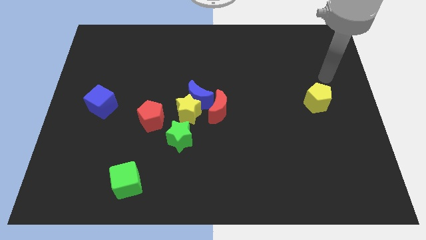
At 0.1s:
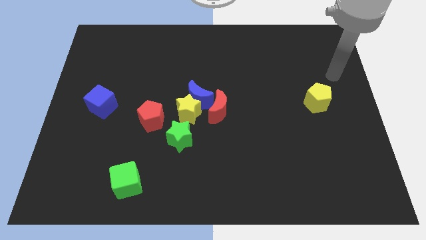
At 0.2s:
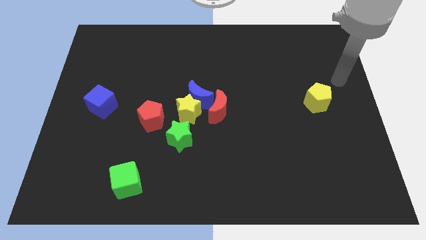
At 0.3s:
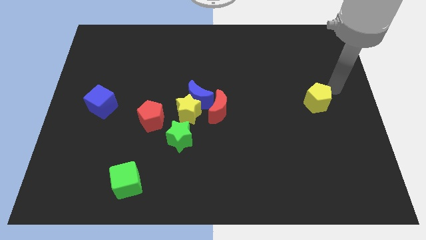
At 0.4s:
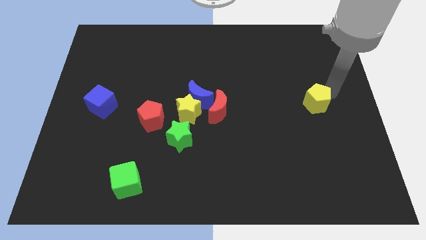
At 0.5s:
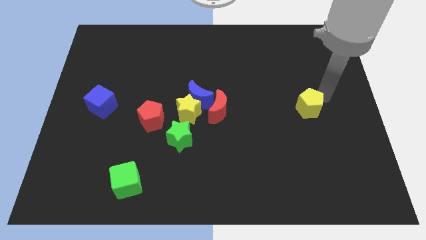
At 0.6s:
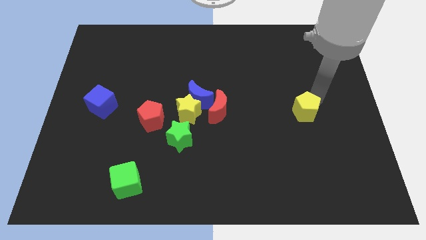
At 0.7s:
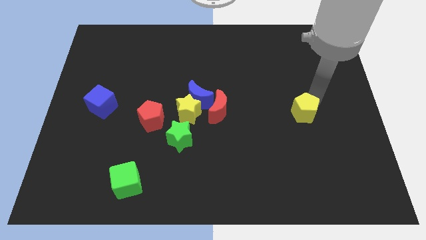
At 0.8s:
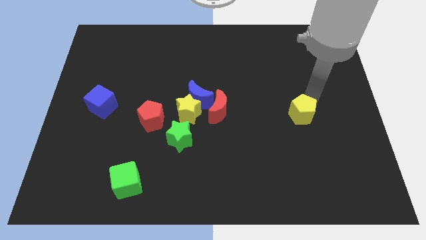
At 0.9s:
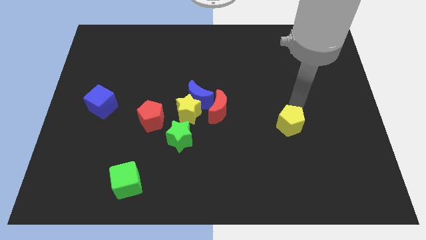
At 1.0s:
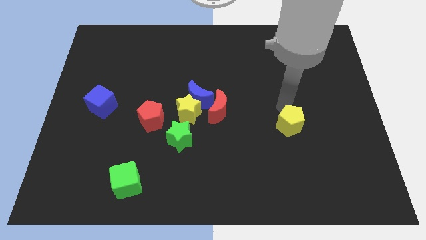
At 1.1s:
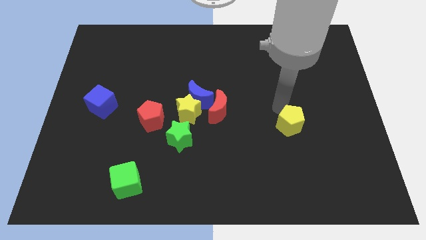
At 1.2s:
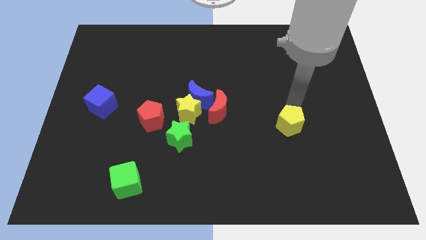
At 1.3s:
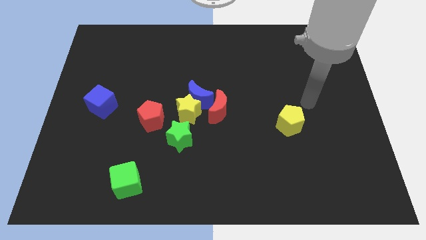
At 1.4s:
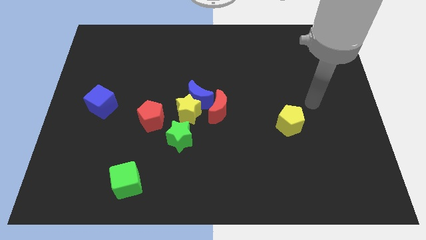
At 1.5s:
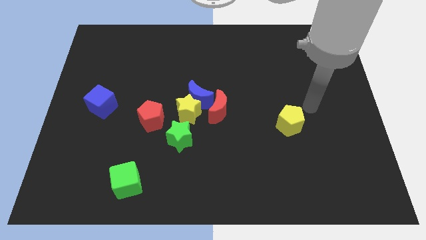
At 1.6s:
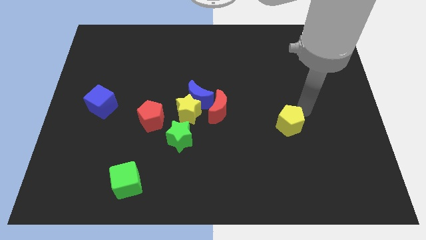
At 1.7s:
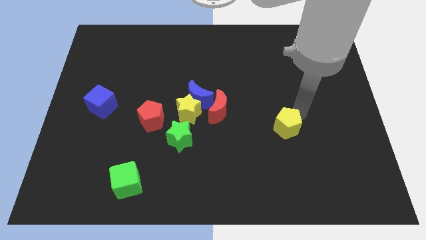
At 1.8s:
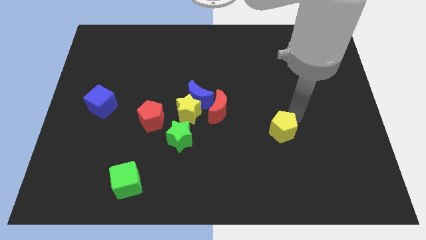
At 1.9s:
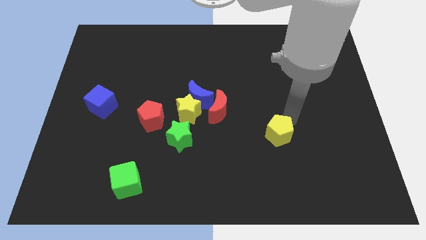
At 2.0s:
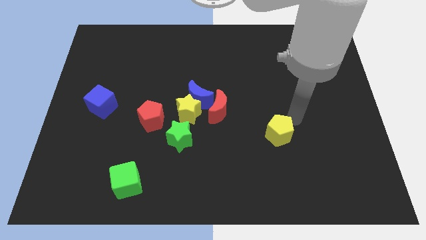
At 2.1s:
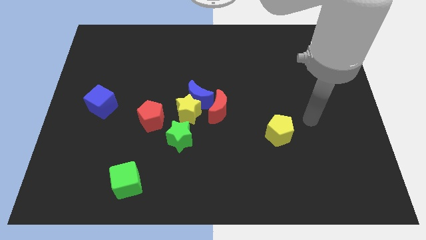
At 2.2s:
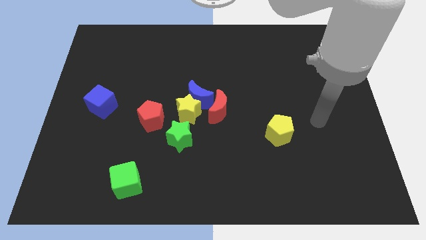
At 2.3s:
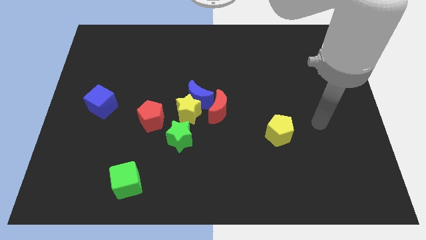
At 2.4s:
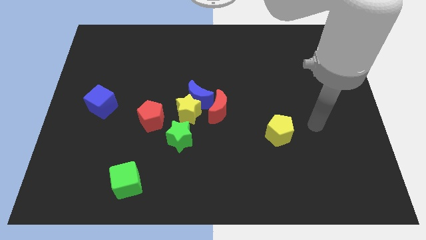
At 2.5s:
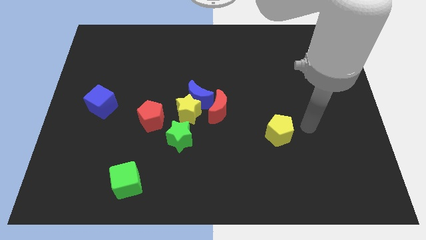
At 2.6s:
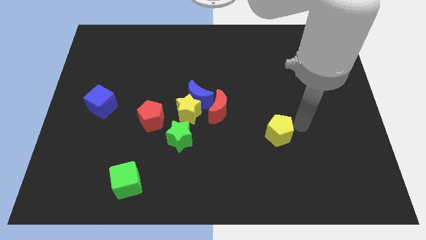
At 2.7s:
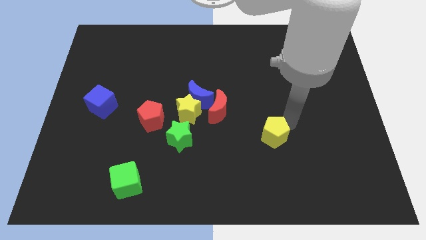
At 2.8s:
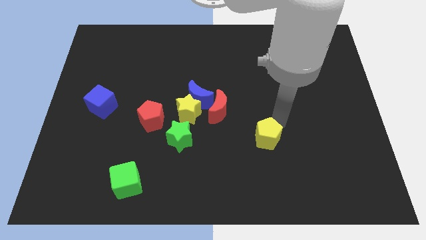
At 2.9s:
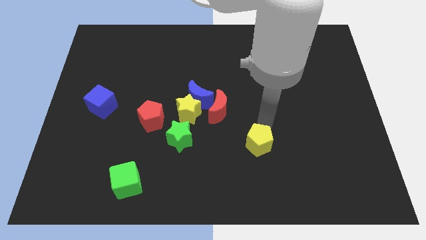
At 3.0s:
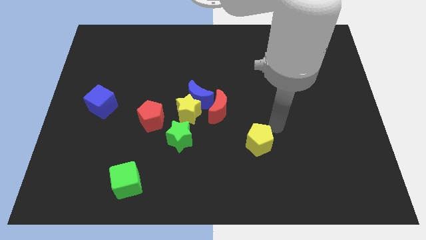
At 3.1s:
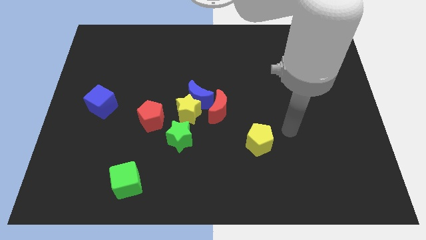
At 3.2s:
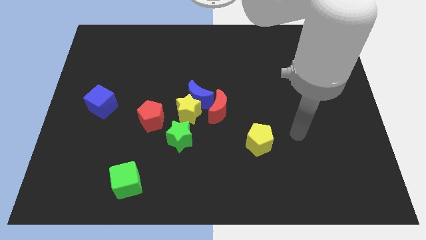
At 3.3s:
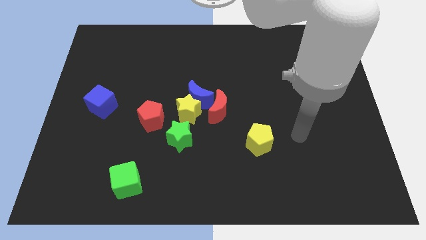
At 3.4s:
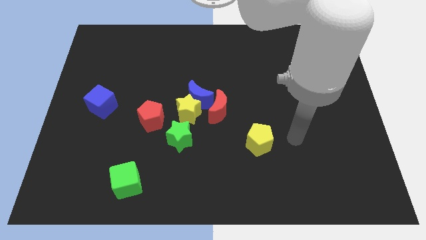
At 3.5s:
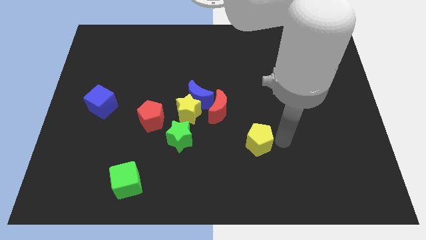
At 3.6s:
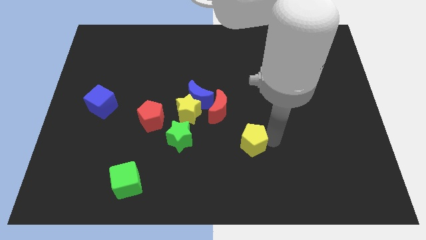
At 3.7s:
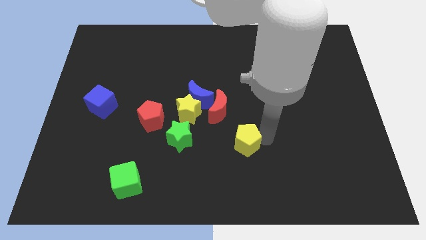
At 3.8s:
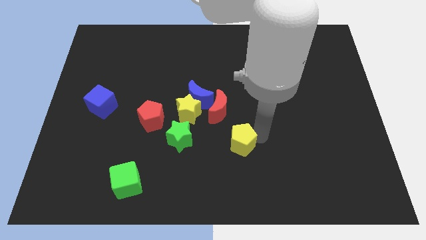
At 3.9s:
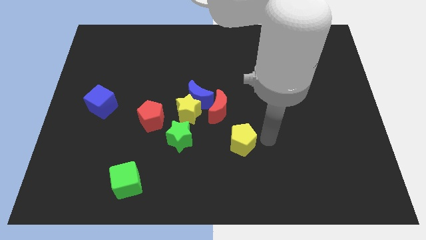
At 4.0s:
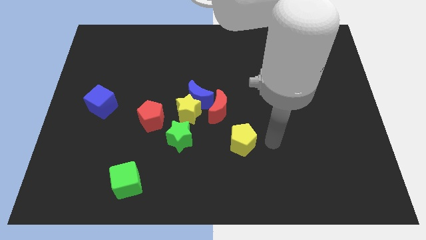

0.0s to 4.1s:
move the yellow pentagon to the right of the green star

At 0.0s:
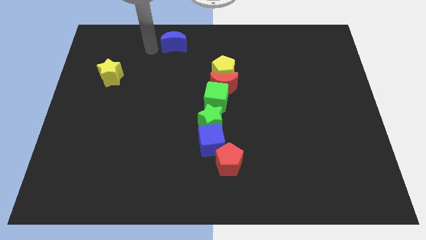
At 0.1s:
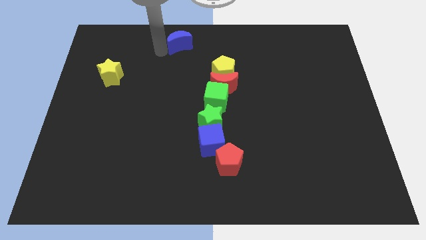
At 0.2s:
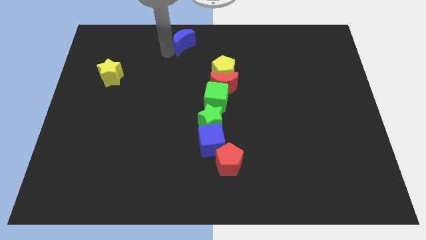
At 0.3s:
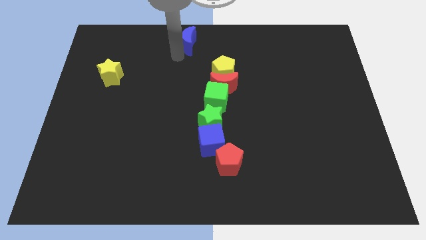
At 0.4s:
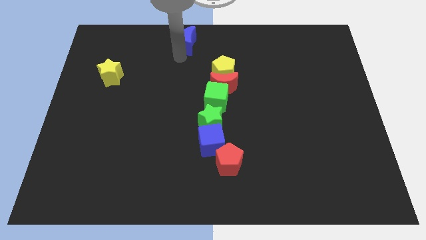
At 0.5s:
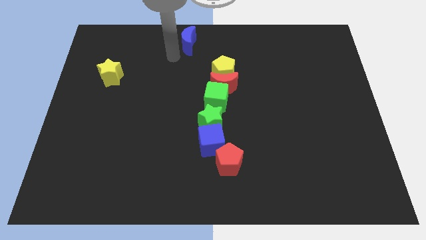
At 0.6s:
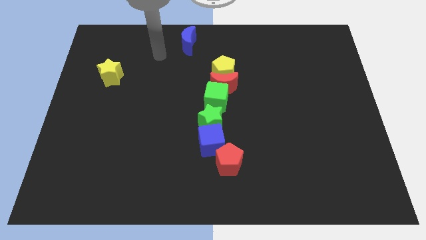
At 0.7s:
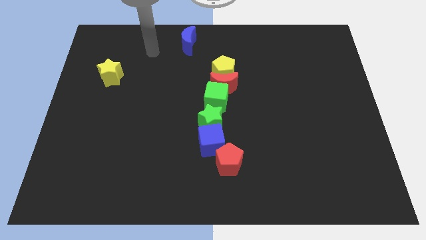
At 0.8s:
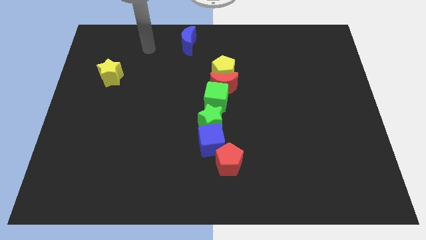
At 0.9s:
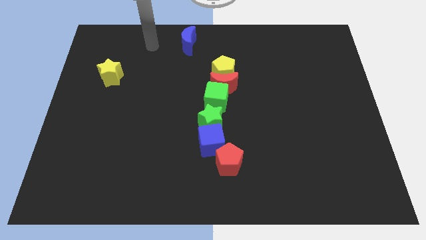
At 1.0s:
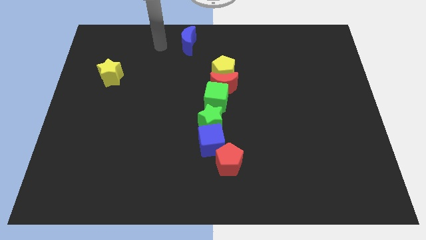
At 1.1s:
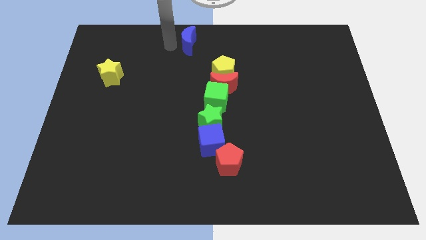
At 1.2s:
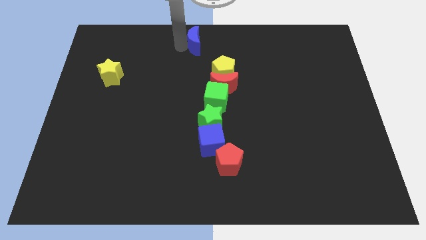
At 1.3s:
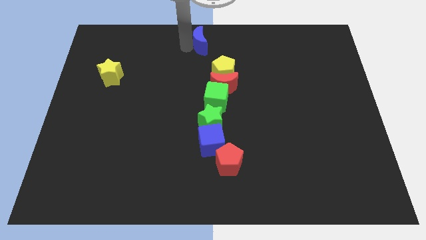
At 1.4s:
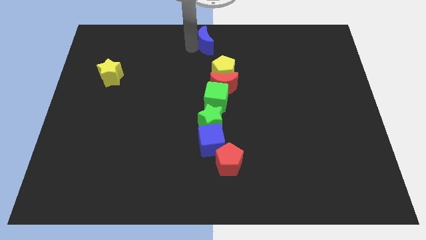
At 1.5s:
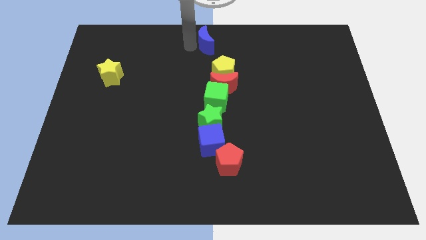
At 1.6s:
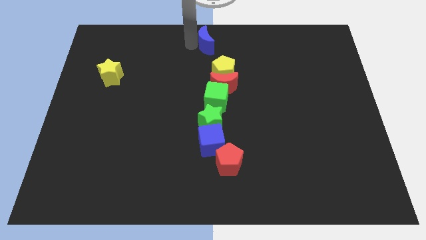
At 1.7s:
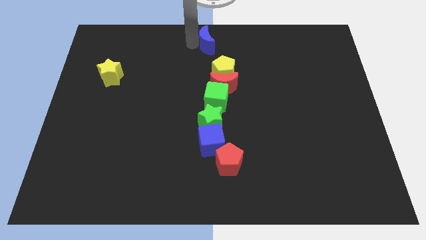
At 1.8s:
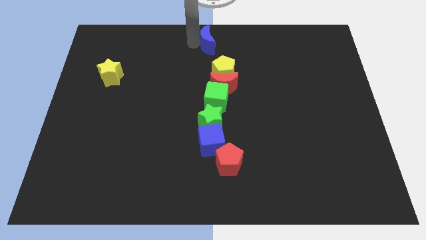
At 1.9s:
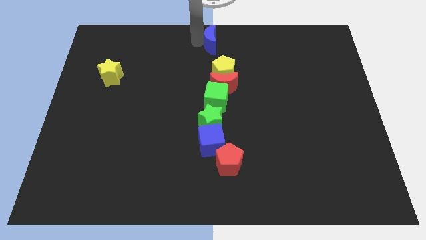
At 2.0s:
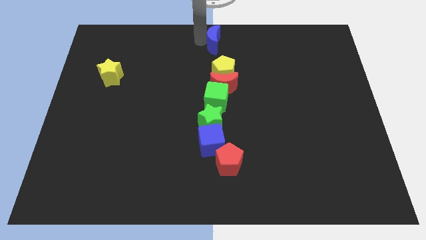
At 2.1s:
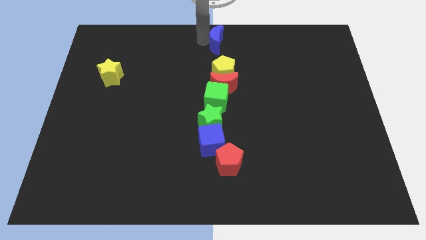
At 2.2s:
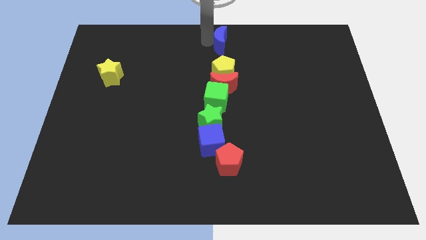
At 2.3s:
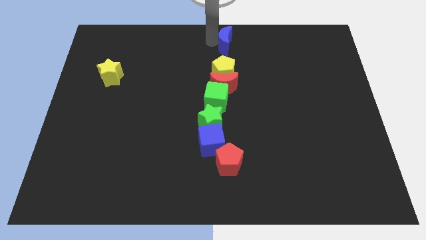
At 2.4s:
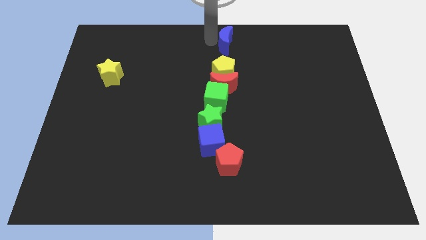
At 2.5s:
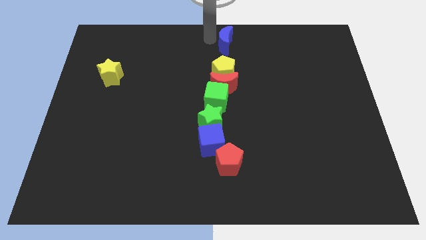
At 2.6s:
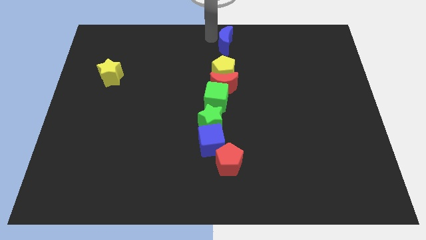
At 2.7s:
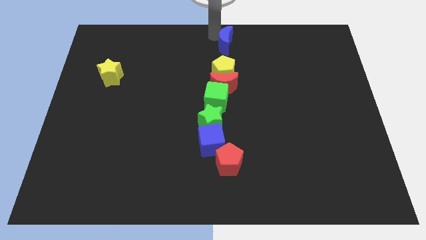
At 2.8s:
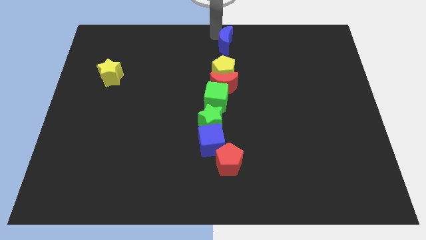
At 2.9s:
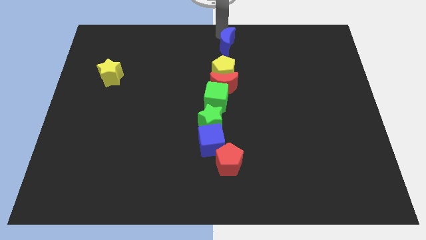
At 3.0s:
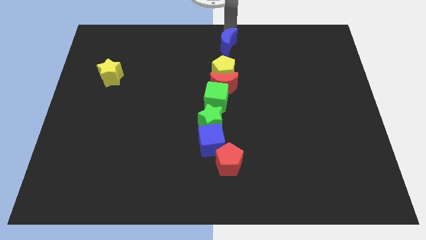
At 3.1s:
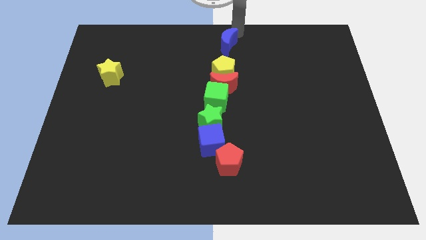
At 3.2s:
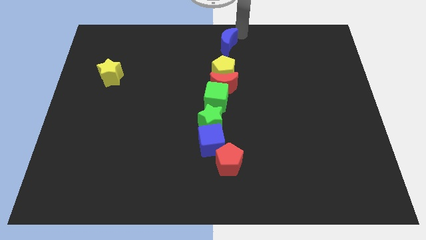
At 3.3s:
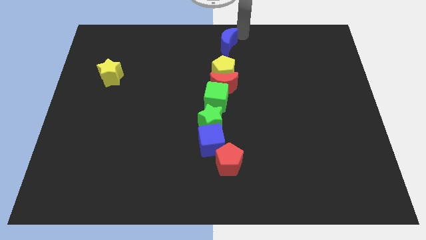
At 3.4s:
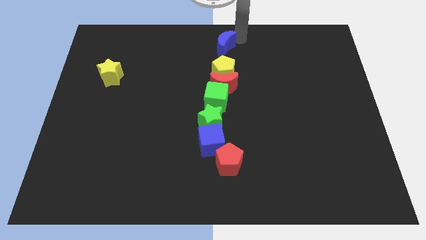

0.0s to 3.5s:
push the blue crescent to the top of the yellow pentagon

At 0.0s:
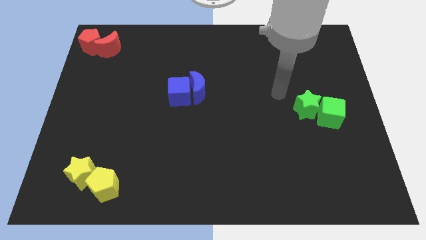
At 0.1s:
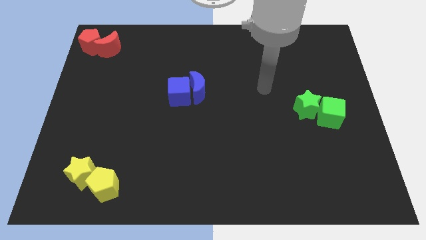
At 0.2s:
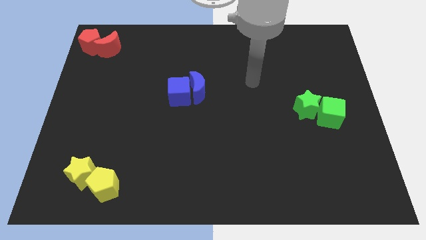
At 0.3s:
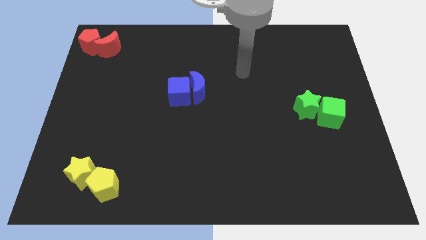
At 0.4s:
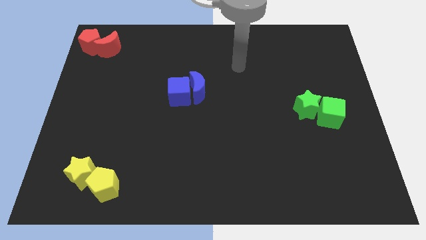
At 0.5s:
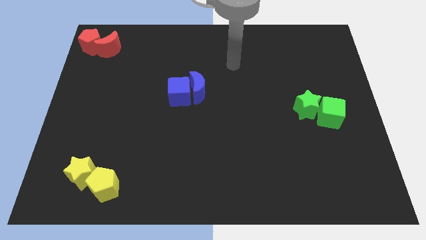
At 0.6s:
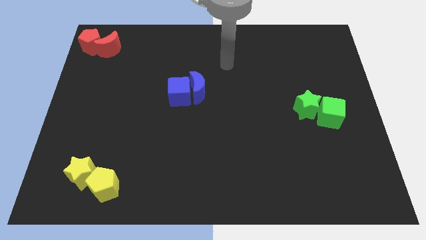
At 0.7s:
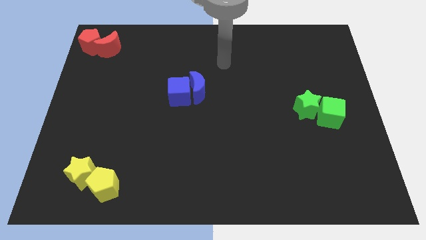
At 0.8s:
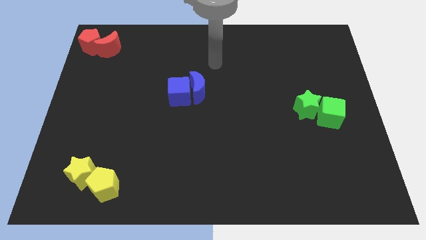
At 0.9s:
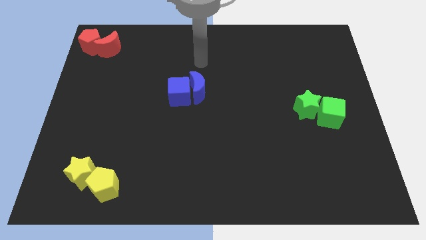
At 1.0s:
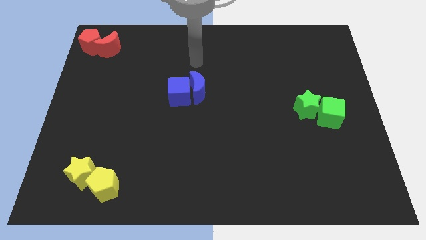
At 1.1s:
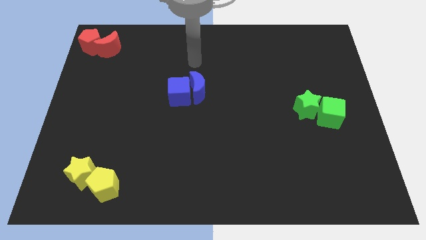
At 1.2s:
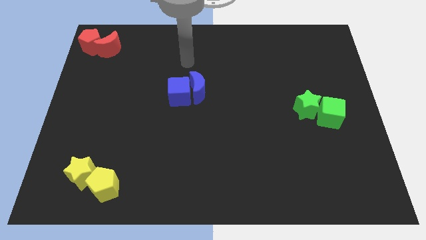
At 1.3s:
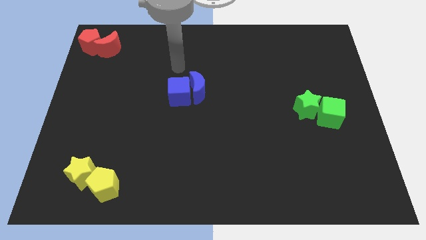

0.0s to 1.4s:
move your arm above the blue crescent

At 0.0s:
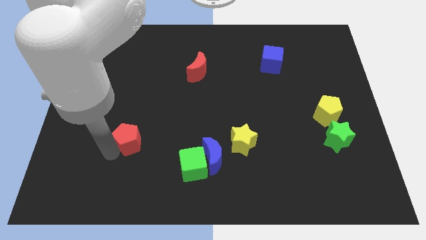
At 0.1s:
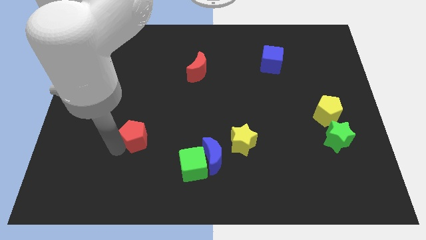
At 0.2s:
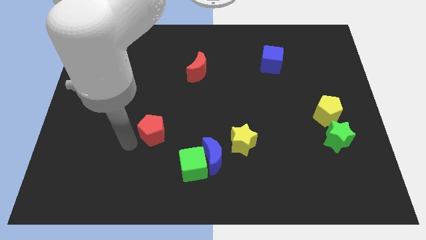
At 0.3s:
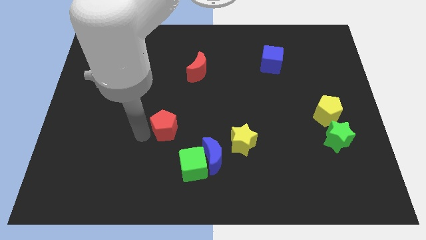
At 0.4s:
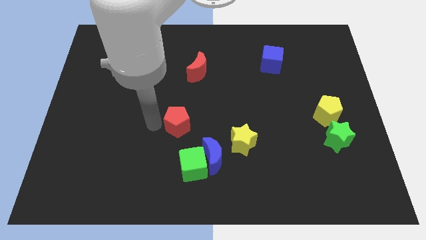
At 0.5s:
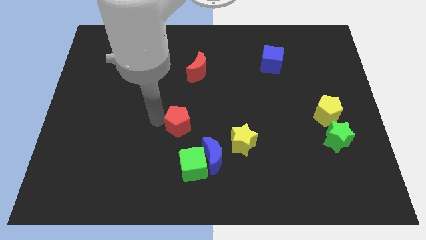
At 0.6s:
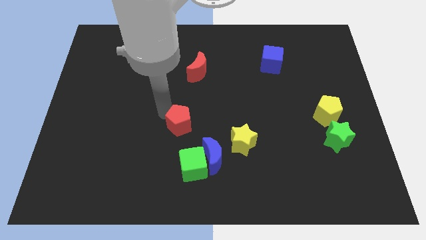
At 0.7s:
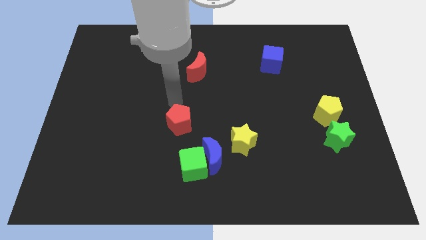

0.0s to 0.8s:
place the red pentagon above the green cube
